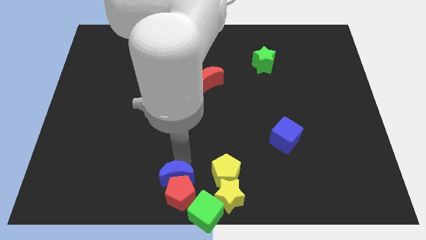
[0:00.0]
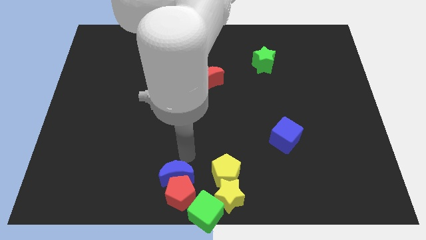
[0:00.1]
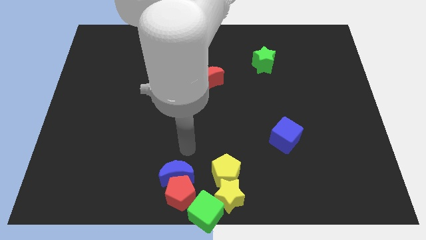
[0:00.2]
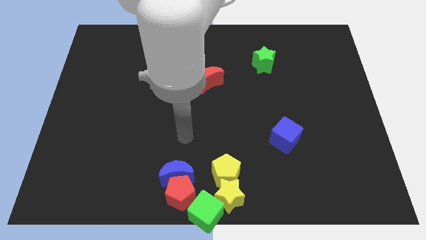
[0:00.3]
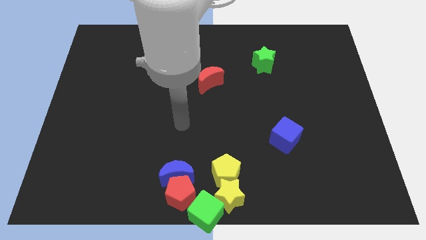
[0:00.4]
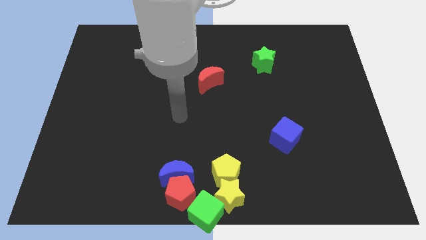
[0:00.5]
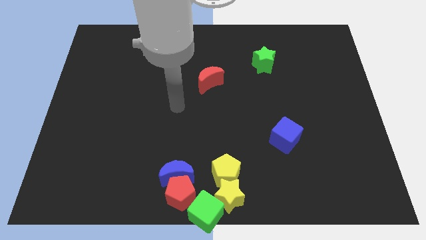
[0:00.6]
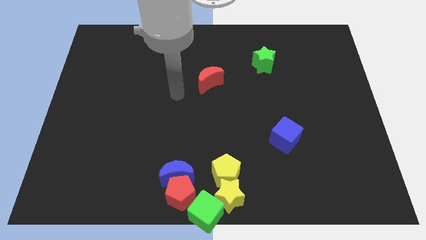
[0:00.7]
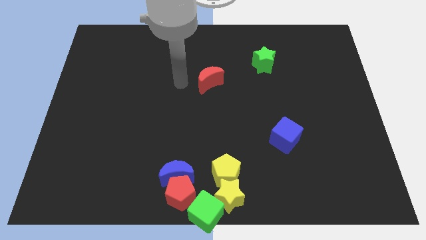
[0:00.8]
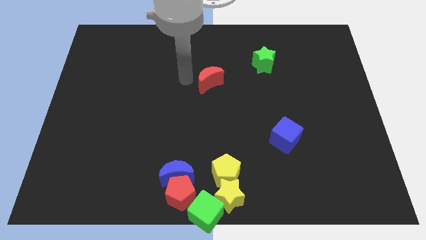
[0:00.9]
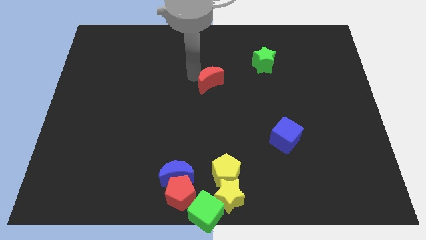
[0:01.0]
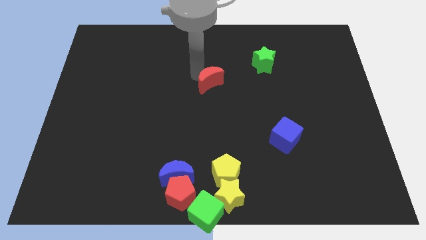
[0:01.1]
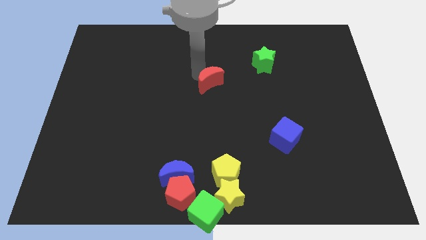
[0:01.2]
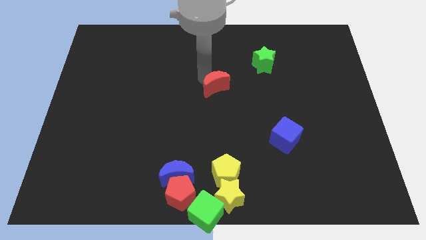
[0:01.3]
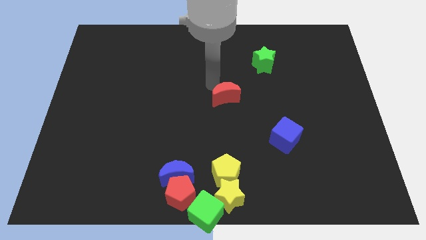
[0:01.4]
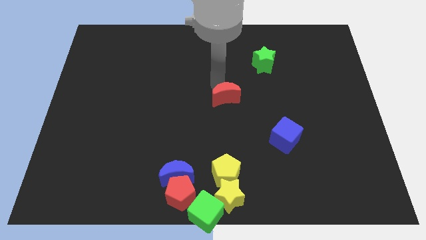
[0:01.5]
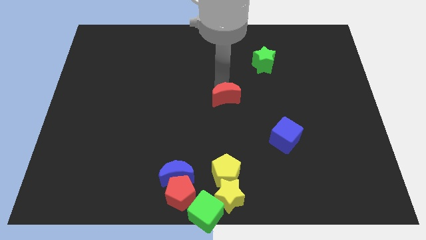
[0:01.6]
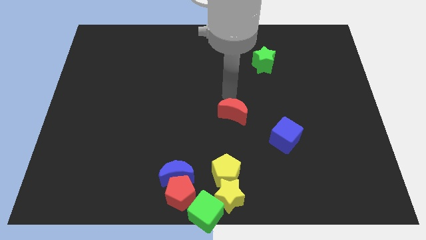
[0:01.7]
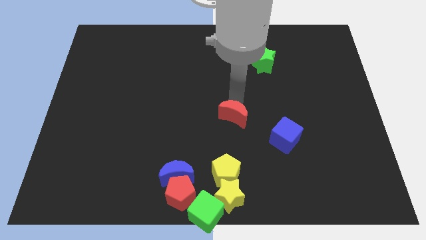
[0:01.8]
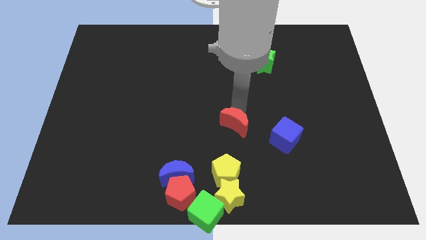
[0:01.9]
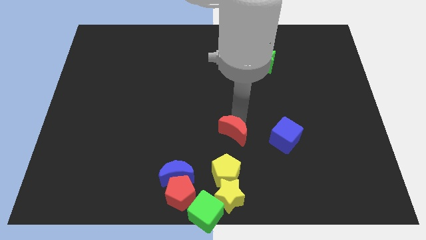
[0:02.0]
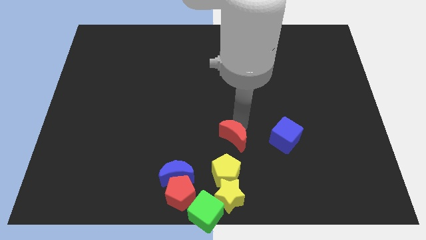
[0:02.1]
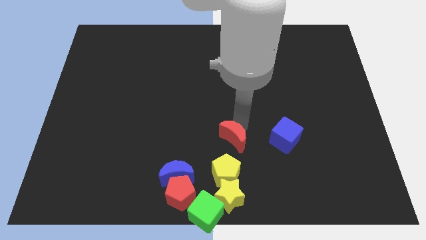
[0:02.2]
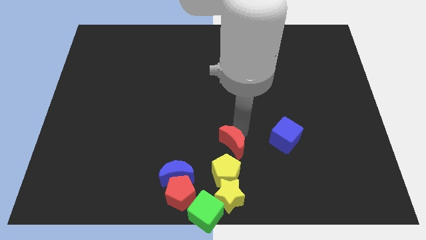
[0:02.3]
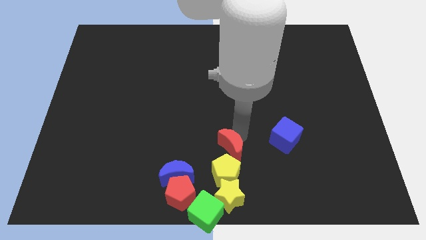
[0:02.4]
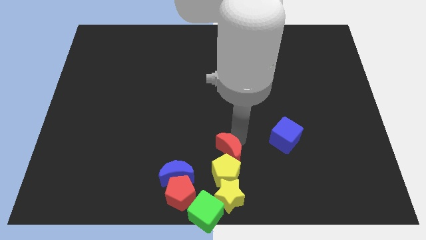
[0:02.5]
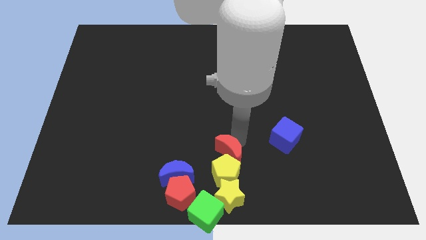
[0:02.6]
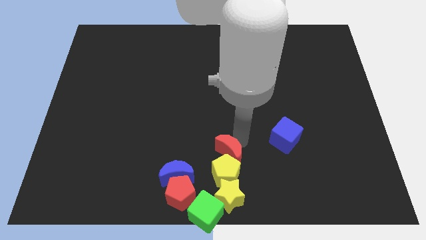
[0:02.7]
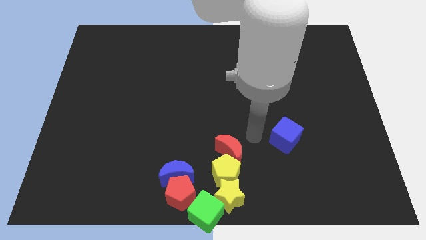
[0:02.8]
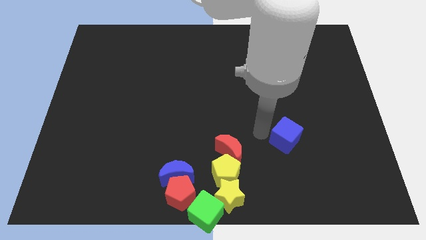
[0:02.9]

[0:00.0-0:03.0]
push red moon into the yellow pentagon

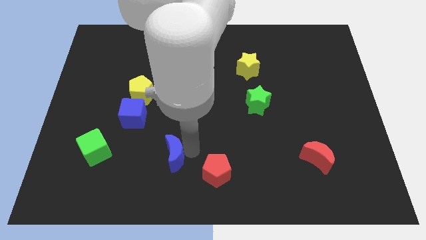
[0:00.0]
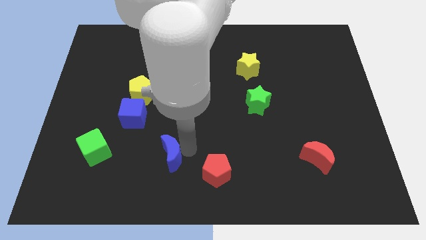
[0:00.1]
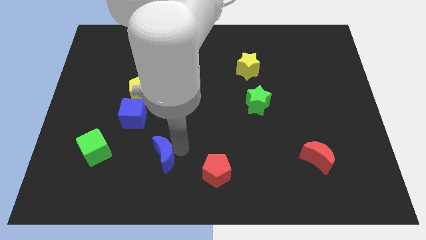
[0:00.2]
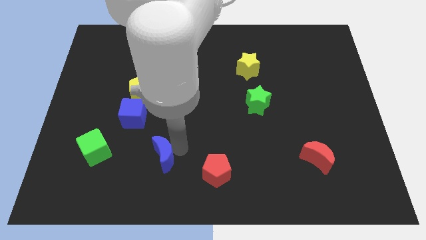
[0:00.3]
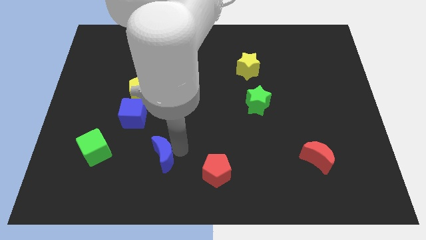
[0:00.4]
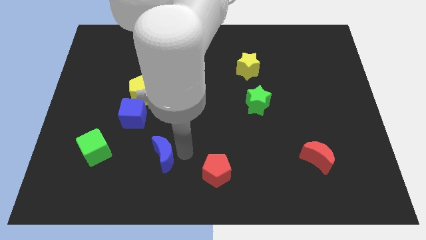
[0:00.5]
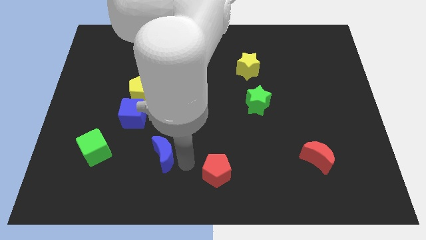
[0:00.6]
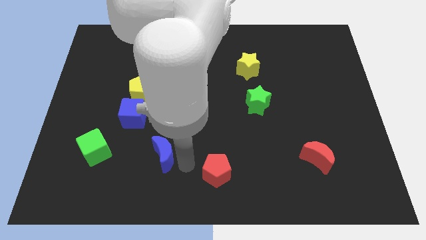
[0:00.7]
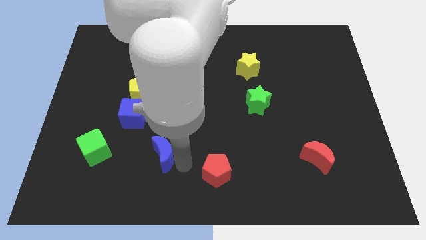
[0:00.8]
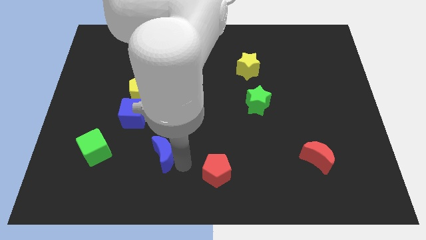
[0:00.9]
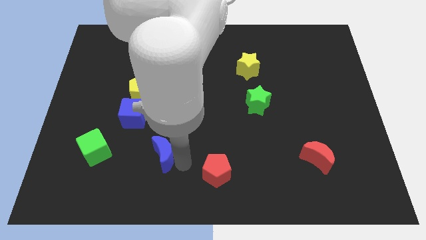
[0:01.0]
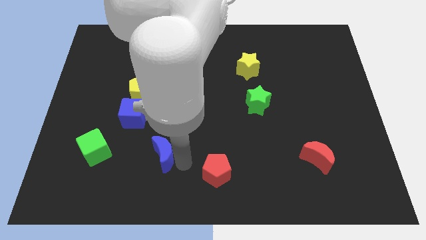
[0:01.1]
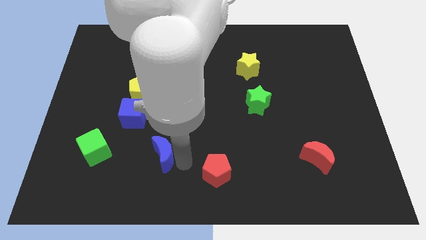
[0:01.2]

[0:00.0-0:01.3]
move the blue crescent diagonally to the bottom right of the blue cube

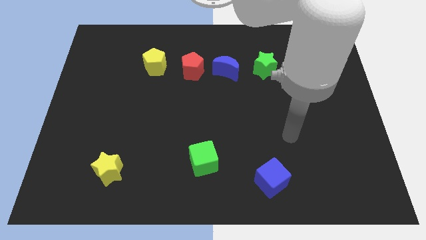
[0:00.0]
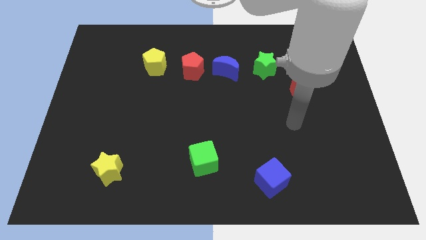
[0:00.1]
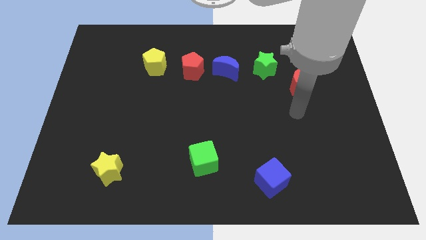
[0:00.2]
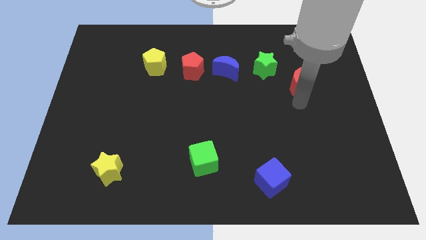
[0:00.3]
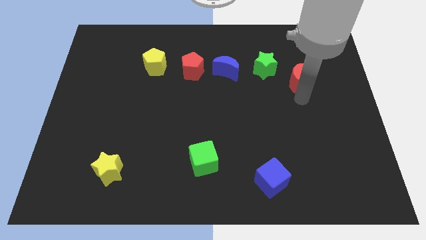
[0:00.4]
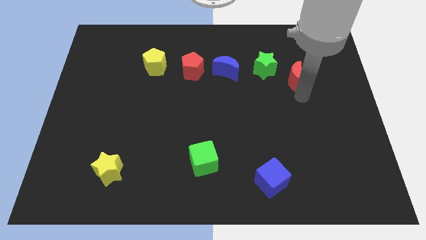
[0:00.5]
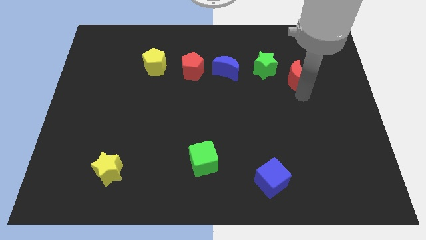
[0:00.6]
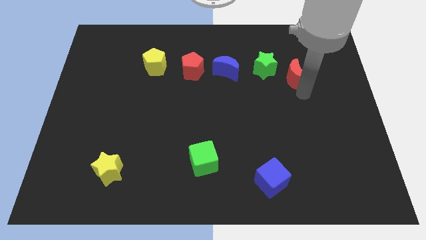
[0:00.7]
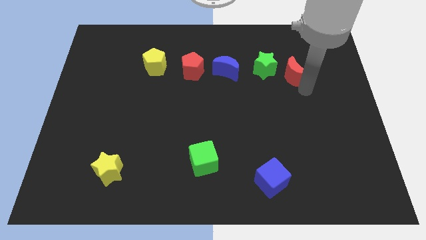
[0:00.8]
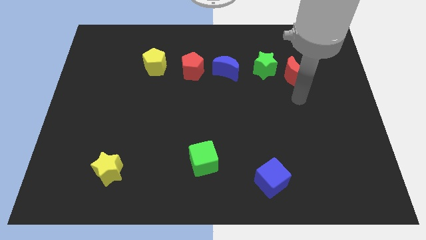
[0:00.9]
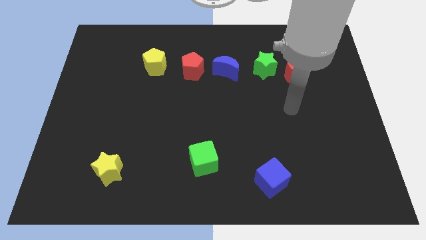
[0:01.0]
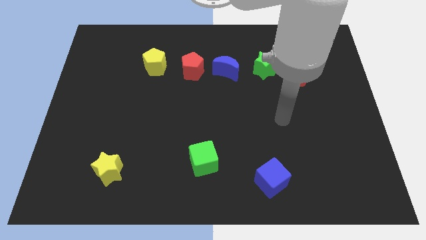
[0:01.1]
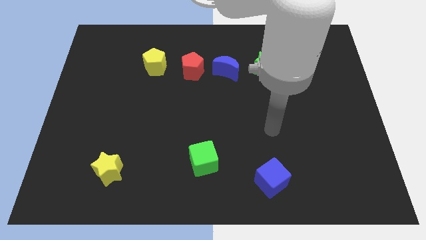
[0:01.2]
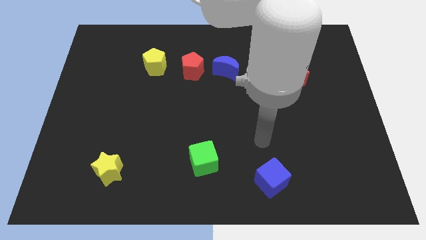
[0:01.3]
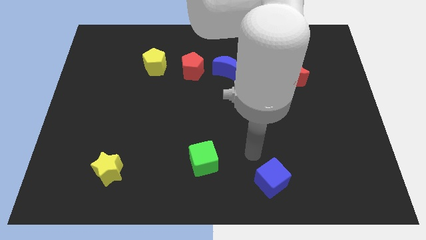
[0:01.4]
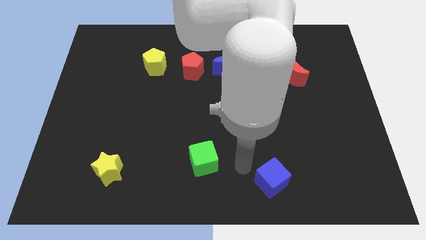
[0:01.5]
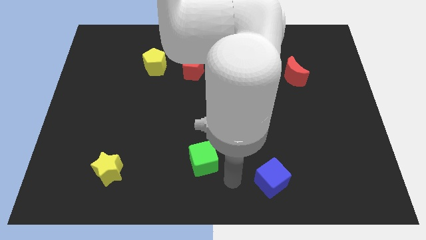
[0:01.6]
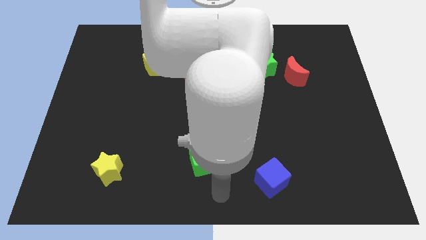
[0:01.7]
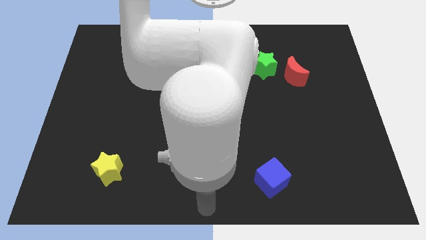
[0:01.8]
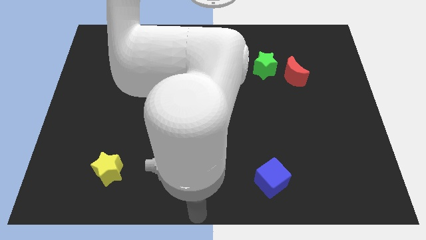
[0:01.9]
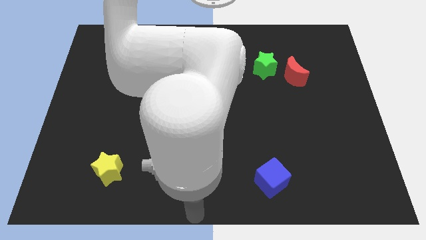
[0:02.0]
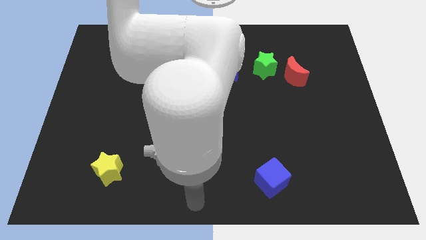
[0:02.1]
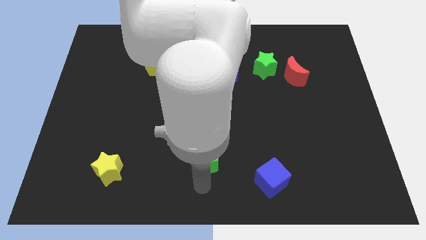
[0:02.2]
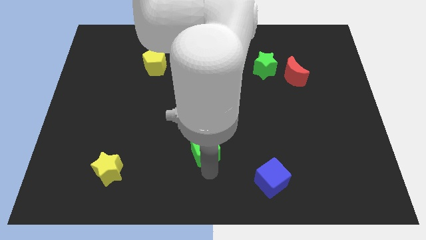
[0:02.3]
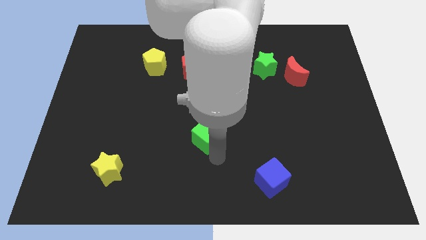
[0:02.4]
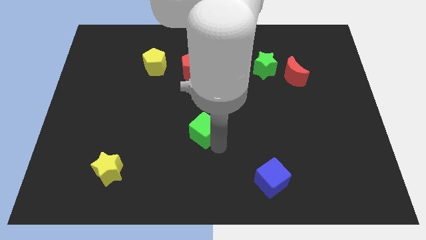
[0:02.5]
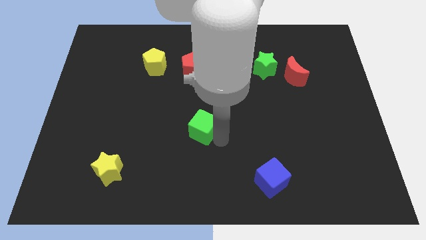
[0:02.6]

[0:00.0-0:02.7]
push green cube slightly upwards

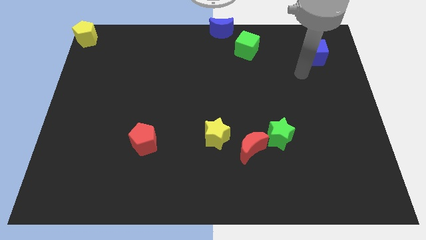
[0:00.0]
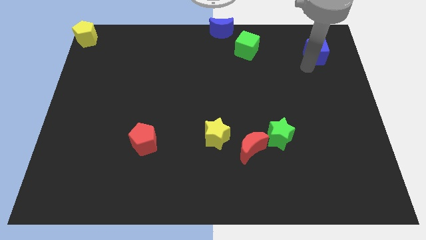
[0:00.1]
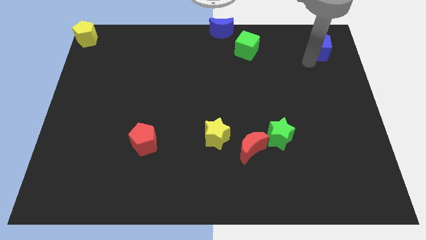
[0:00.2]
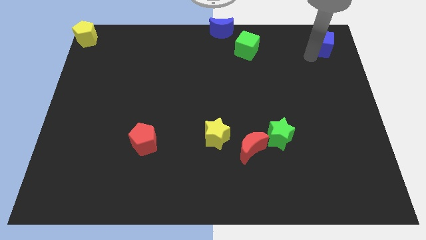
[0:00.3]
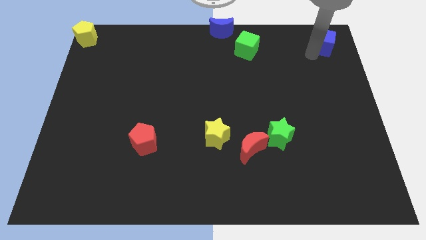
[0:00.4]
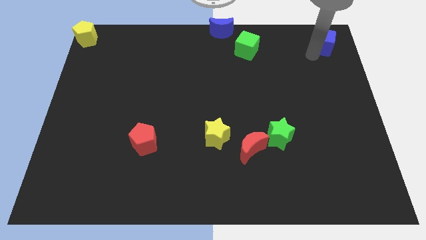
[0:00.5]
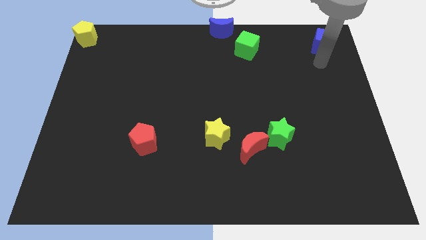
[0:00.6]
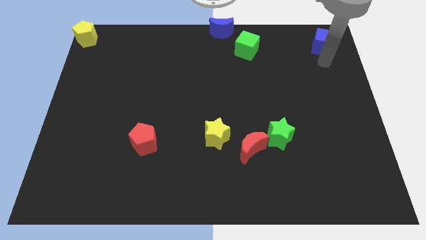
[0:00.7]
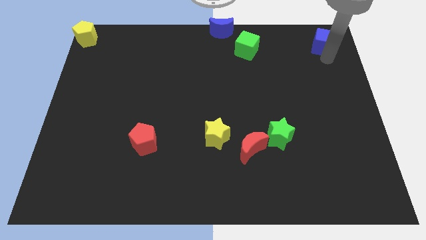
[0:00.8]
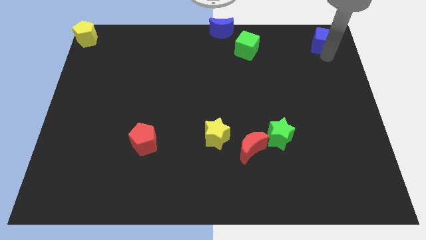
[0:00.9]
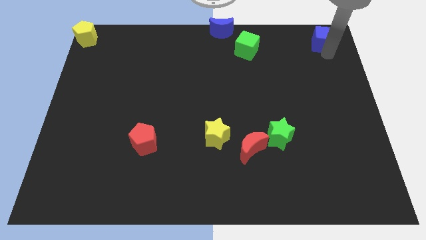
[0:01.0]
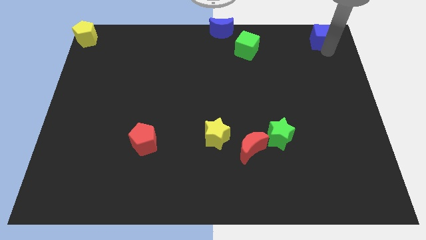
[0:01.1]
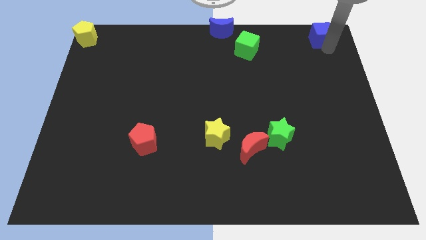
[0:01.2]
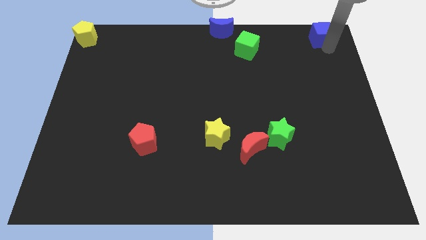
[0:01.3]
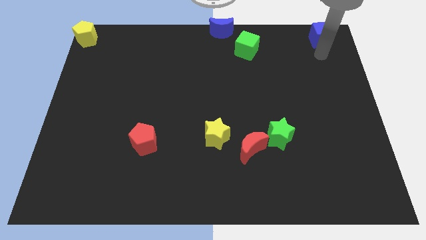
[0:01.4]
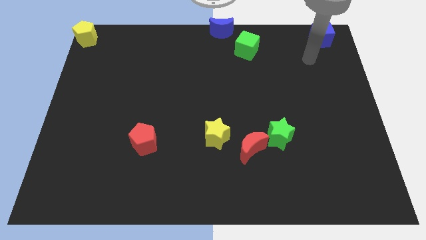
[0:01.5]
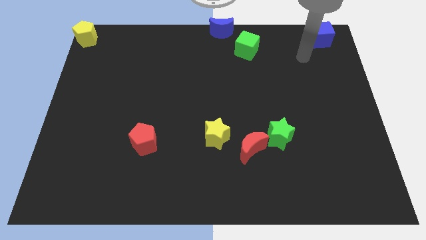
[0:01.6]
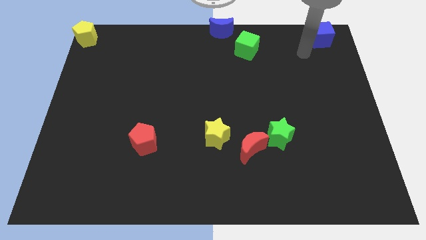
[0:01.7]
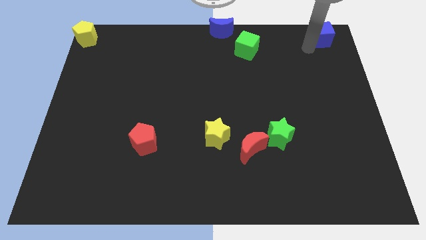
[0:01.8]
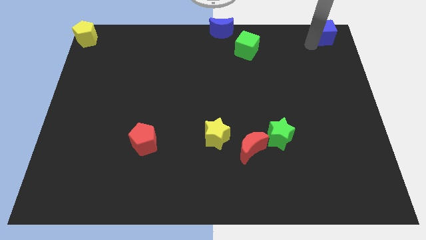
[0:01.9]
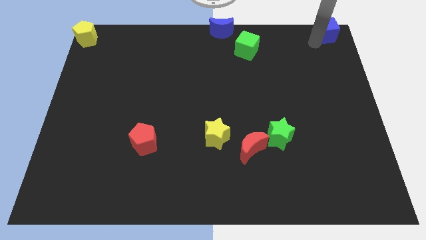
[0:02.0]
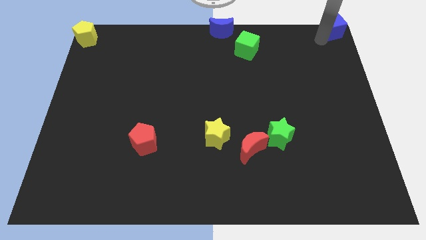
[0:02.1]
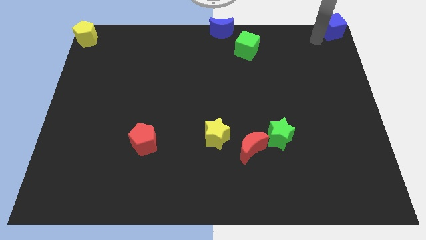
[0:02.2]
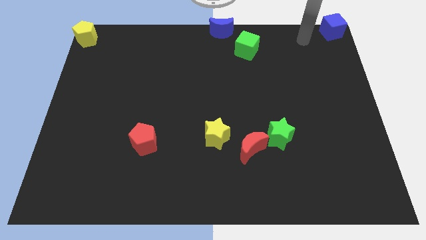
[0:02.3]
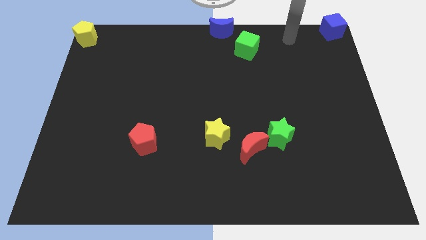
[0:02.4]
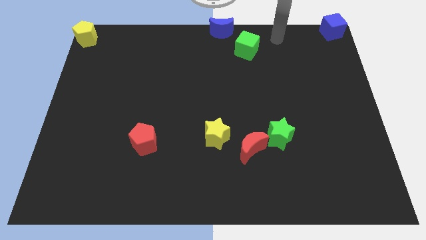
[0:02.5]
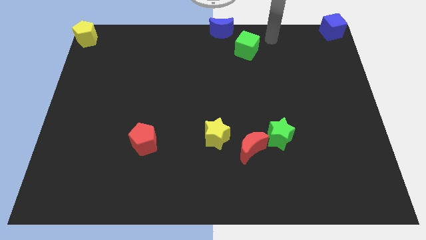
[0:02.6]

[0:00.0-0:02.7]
slide the blue cube to the top right corner of the board
